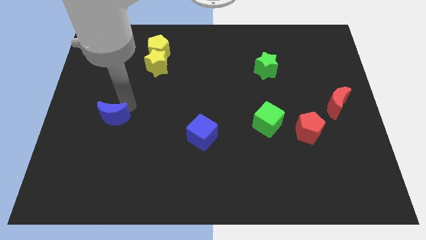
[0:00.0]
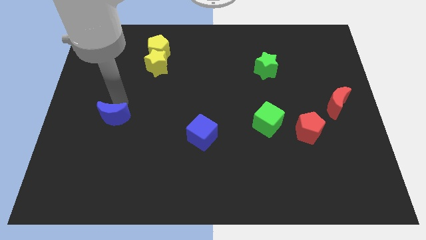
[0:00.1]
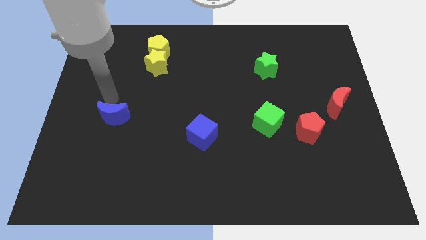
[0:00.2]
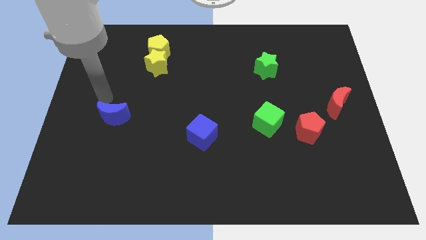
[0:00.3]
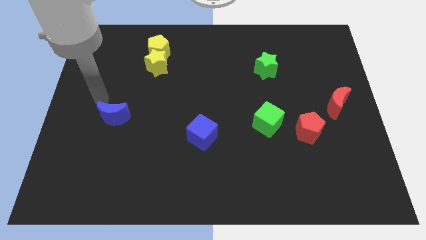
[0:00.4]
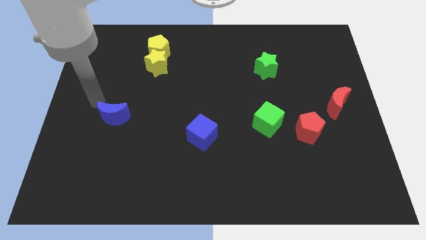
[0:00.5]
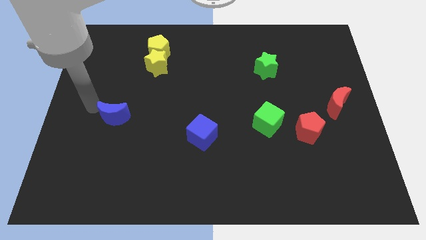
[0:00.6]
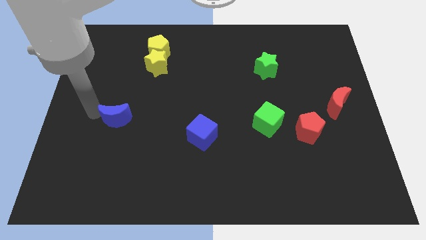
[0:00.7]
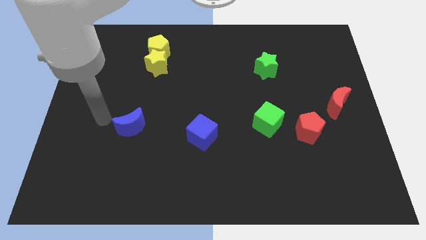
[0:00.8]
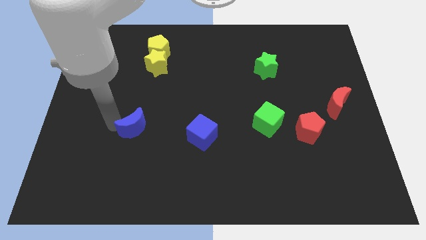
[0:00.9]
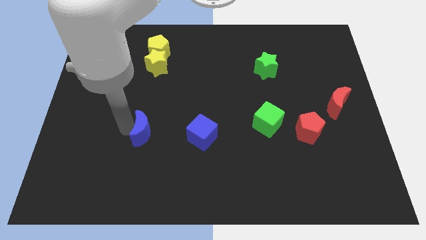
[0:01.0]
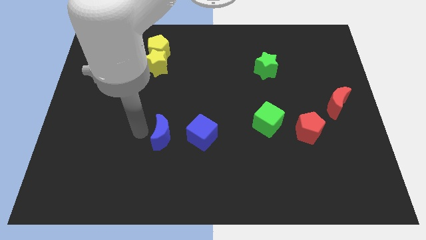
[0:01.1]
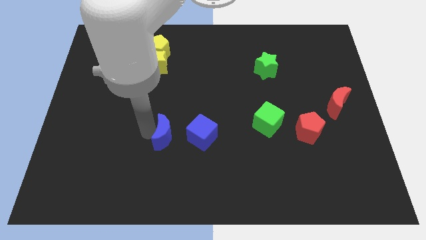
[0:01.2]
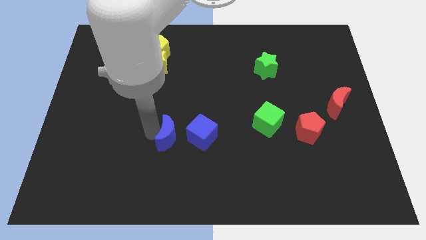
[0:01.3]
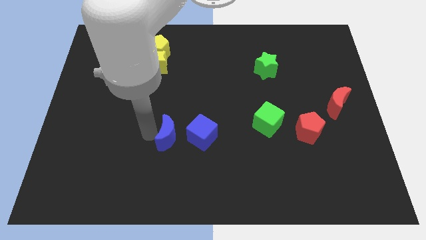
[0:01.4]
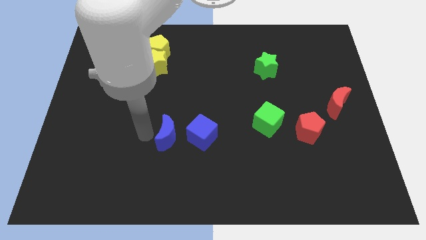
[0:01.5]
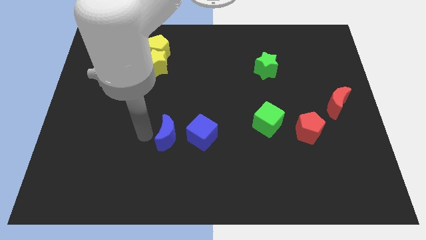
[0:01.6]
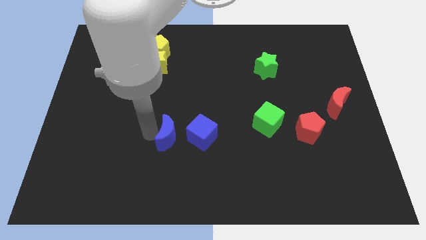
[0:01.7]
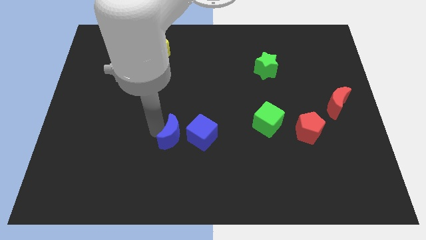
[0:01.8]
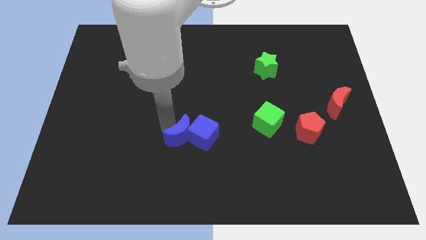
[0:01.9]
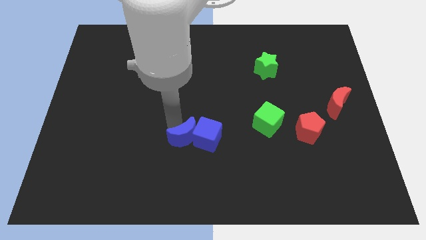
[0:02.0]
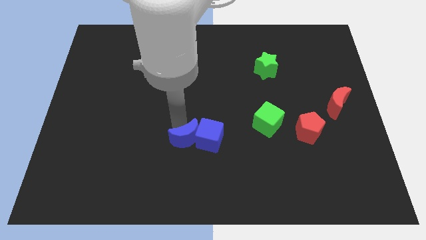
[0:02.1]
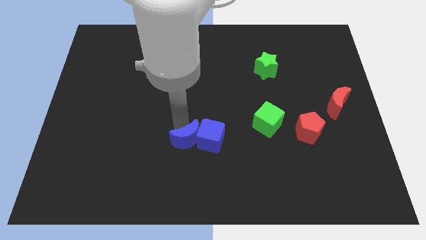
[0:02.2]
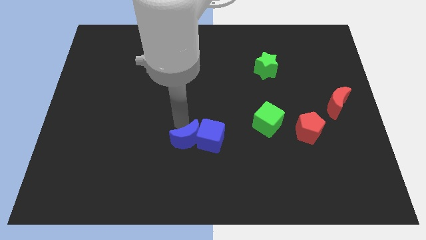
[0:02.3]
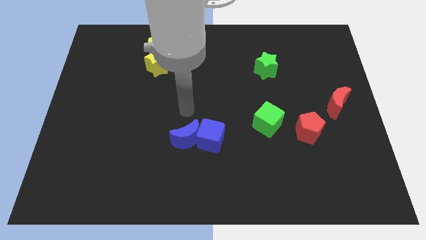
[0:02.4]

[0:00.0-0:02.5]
push the blue moon close to the blue cube

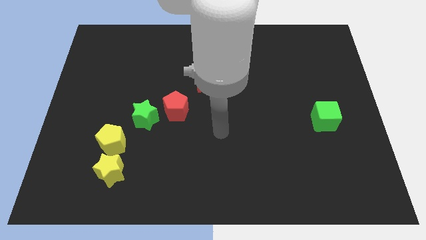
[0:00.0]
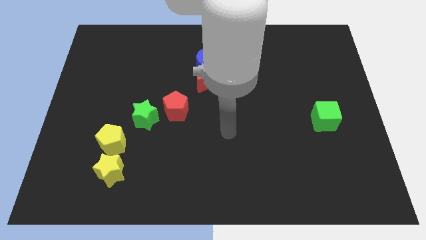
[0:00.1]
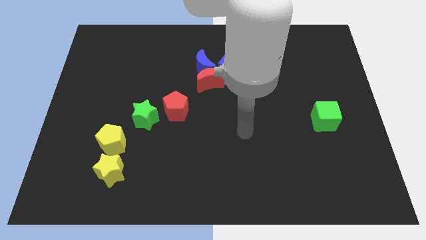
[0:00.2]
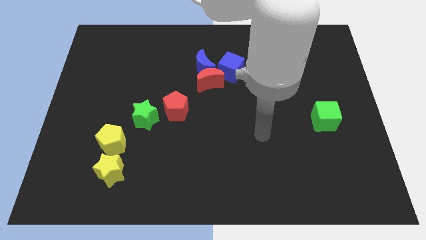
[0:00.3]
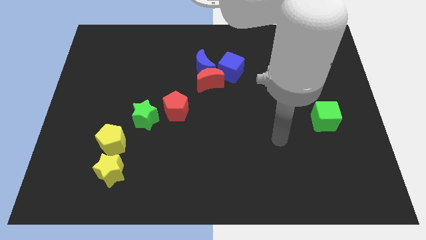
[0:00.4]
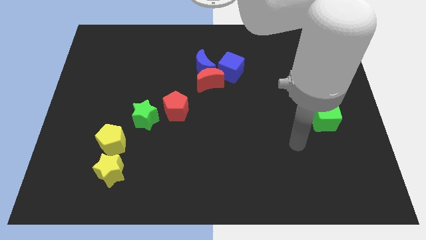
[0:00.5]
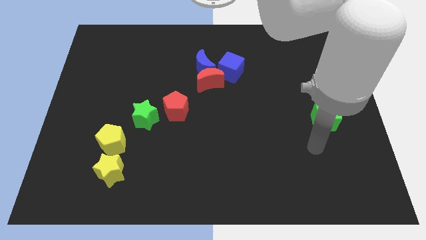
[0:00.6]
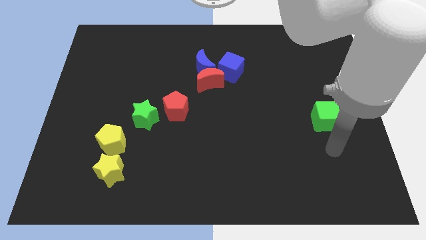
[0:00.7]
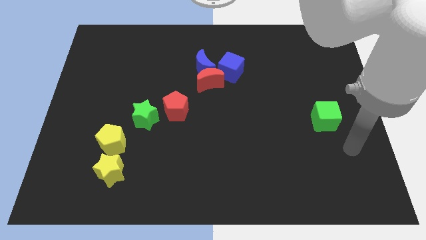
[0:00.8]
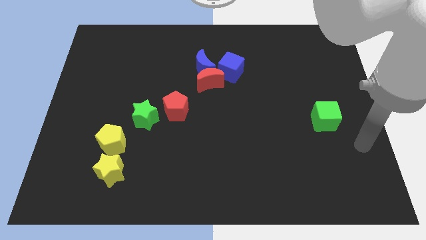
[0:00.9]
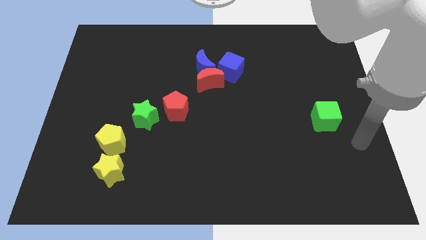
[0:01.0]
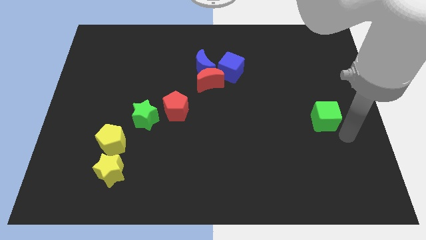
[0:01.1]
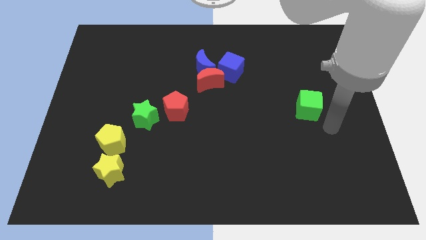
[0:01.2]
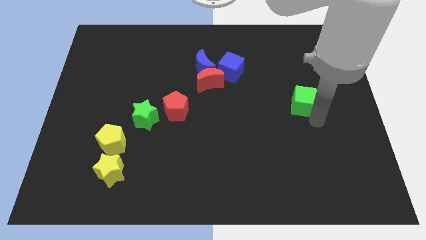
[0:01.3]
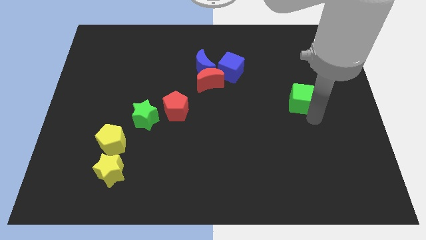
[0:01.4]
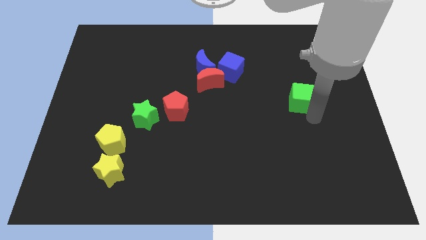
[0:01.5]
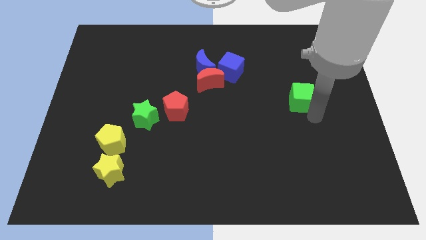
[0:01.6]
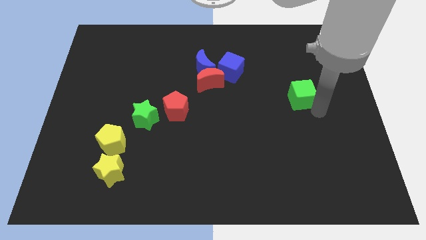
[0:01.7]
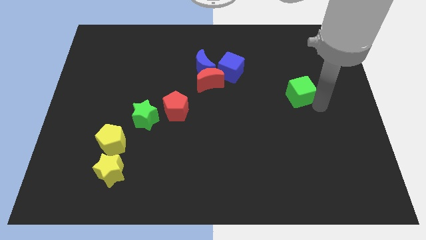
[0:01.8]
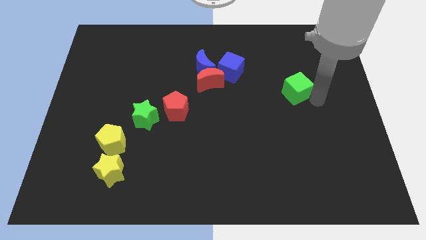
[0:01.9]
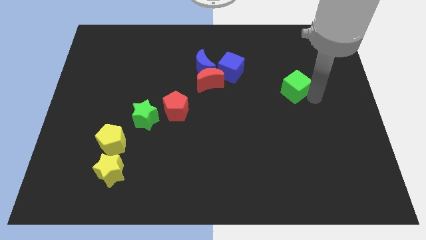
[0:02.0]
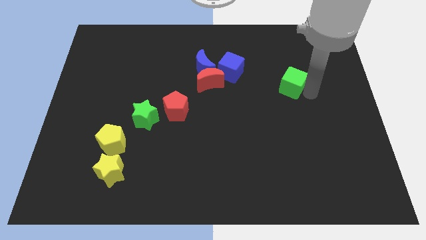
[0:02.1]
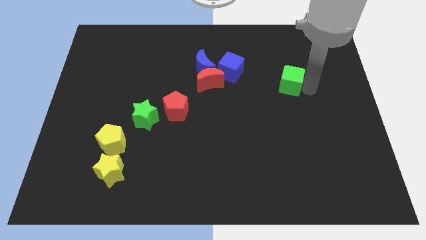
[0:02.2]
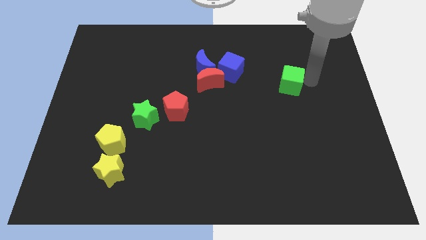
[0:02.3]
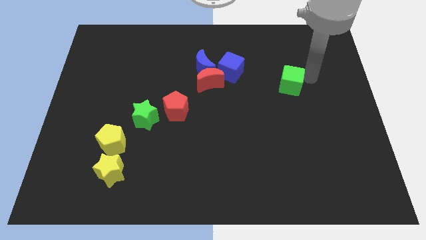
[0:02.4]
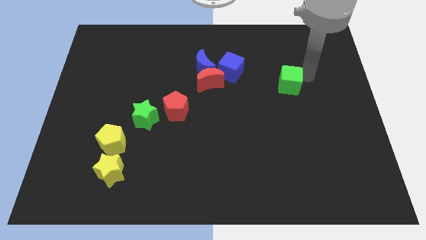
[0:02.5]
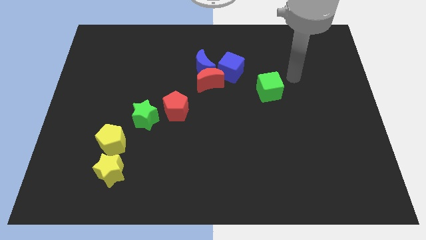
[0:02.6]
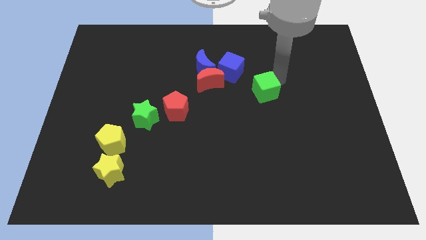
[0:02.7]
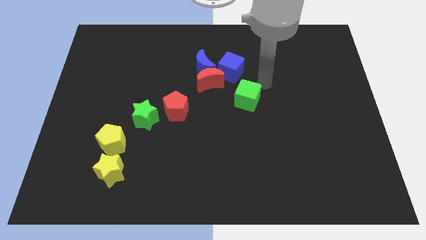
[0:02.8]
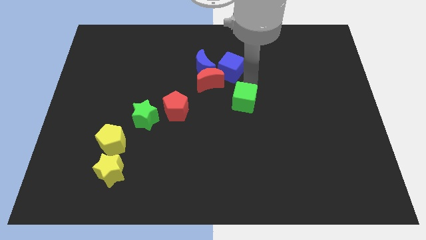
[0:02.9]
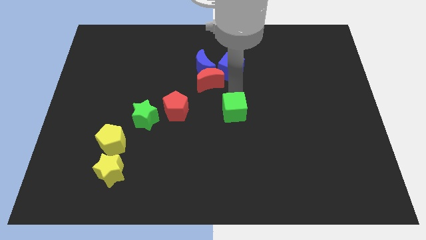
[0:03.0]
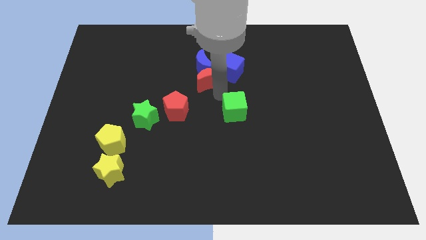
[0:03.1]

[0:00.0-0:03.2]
push the green cube towards the blue cube

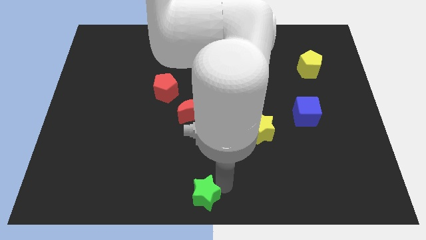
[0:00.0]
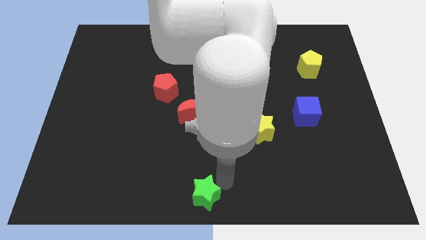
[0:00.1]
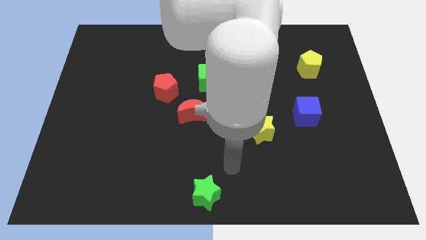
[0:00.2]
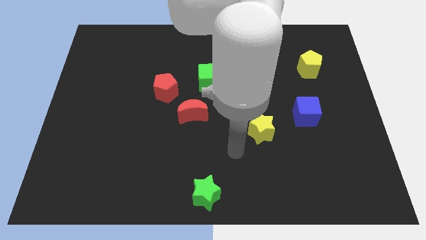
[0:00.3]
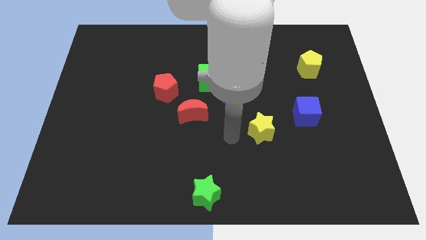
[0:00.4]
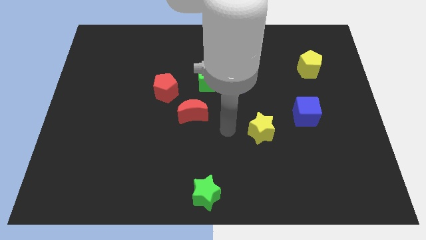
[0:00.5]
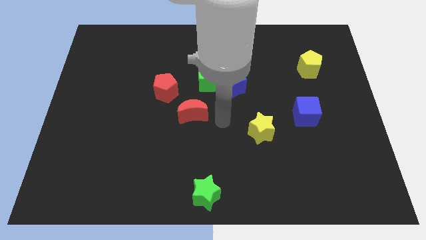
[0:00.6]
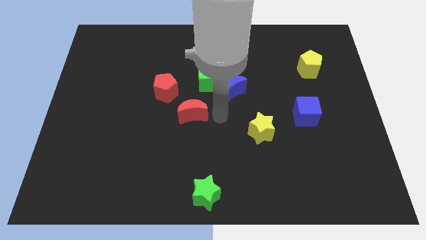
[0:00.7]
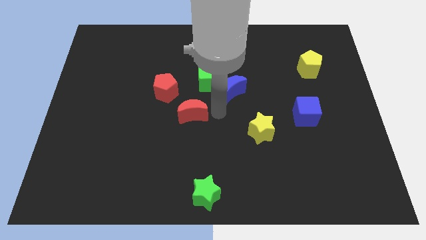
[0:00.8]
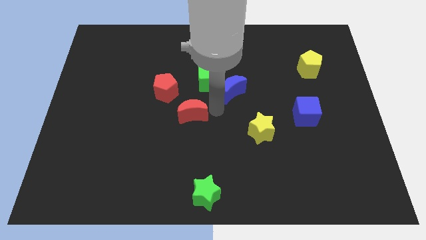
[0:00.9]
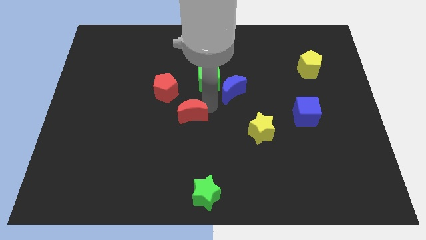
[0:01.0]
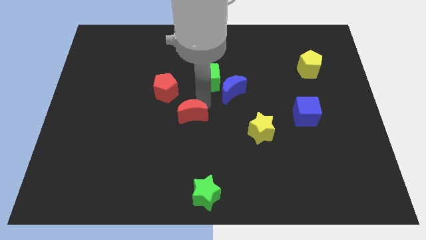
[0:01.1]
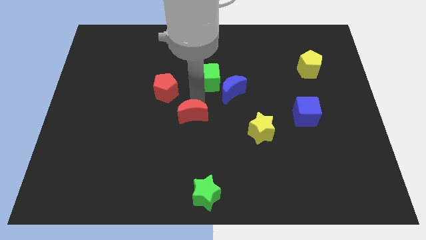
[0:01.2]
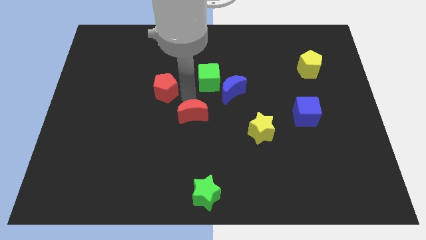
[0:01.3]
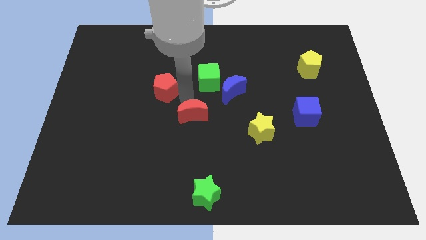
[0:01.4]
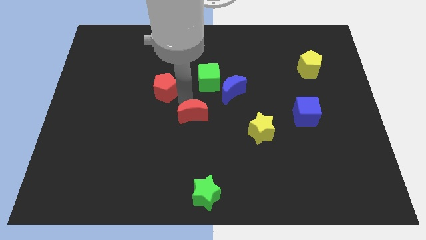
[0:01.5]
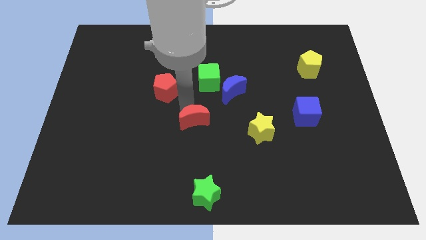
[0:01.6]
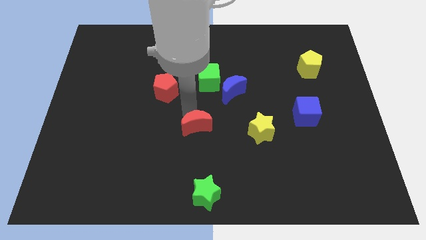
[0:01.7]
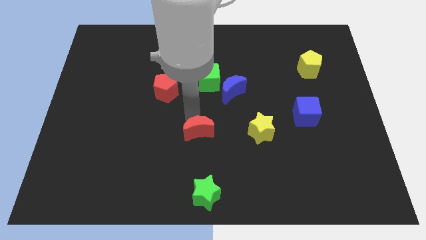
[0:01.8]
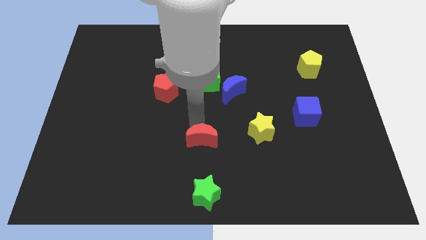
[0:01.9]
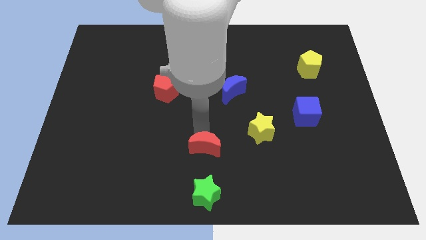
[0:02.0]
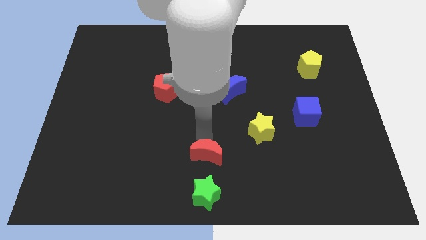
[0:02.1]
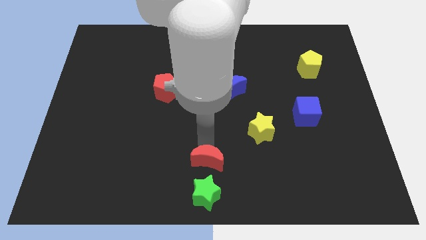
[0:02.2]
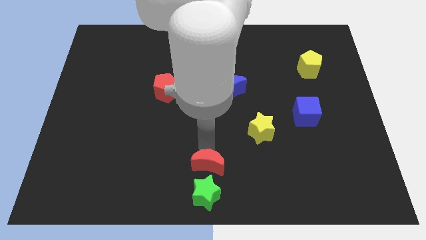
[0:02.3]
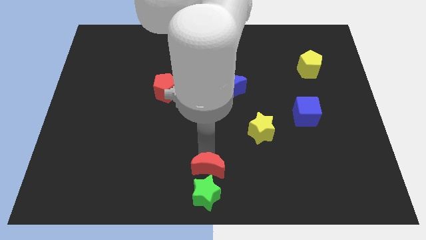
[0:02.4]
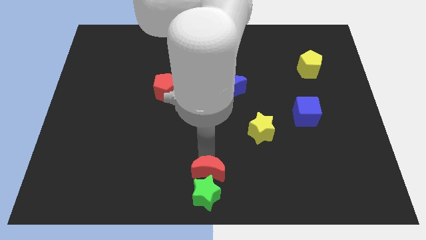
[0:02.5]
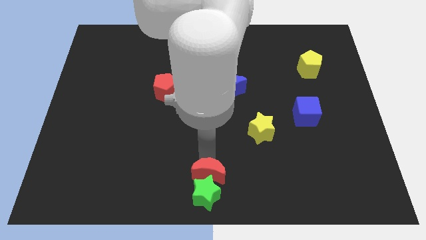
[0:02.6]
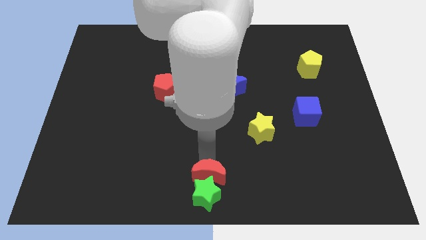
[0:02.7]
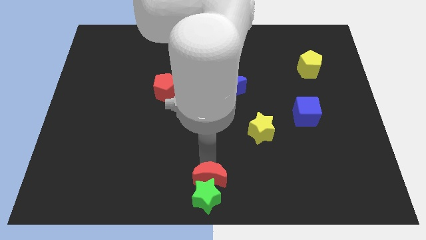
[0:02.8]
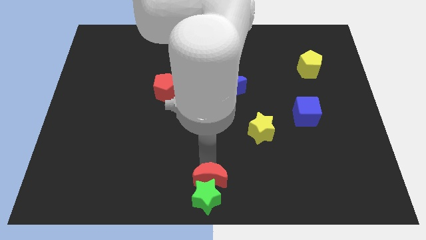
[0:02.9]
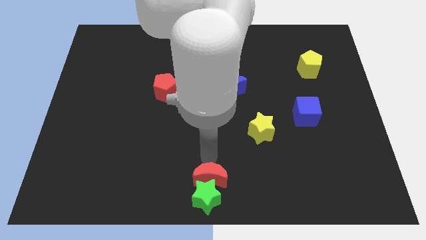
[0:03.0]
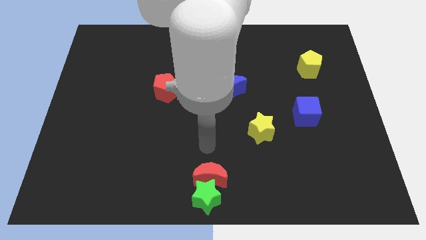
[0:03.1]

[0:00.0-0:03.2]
push the red crescent to the top of the green star
